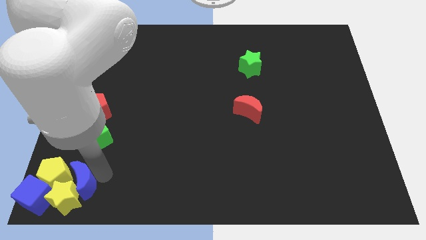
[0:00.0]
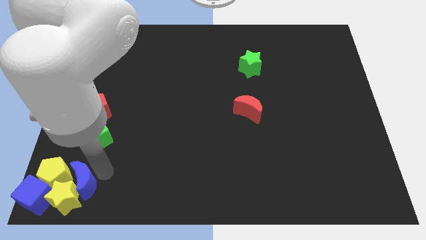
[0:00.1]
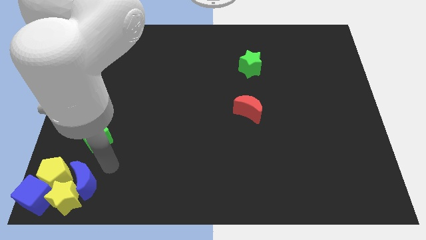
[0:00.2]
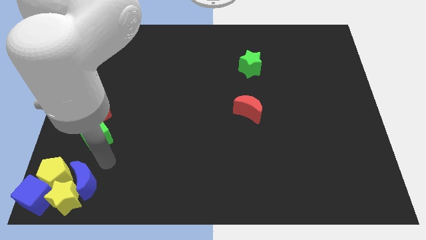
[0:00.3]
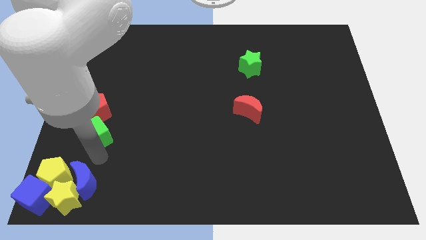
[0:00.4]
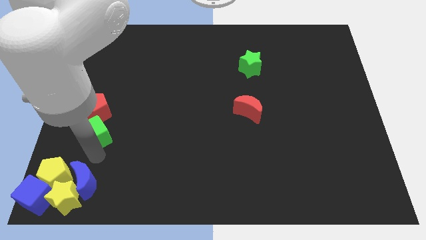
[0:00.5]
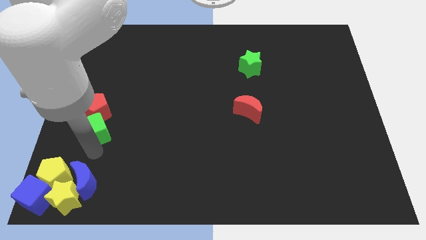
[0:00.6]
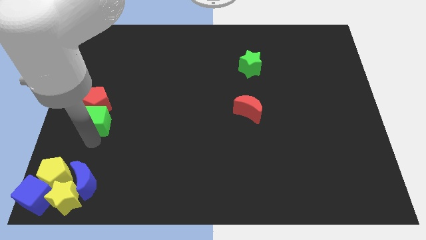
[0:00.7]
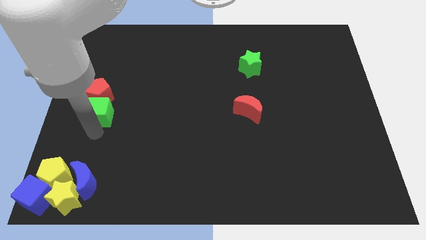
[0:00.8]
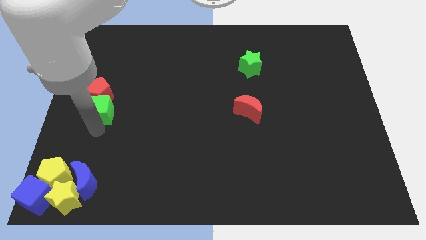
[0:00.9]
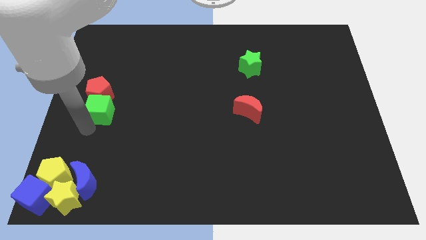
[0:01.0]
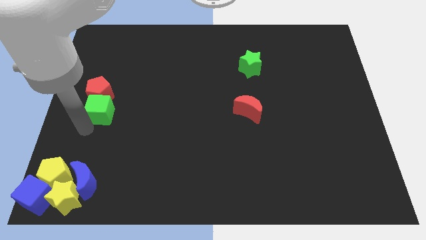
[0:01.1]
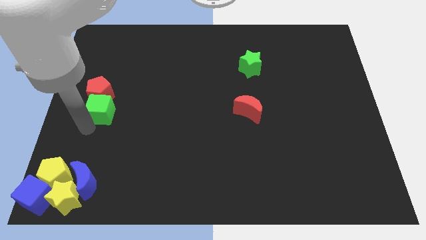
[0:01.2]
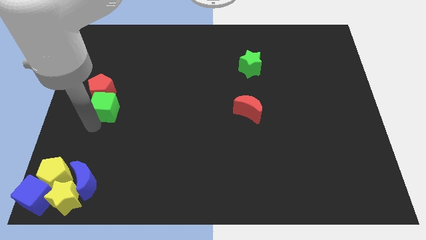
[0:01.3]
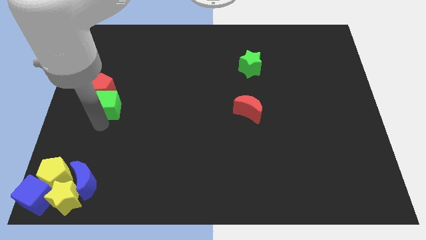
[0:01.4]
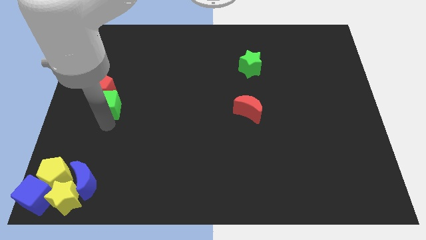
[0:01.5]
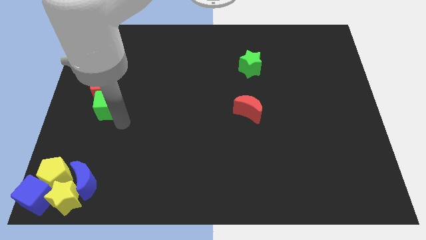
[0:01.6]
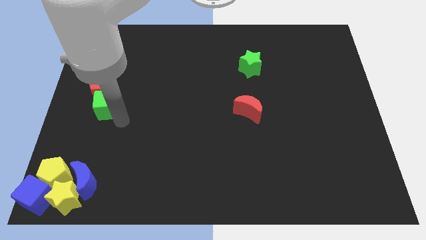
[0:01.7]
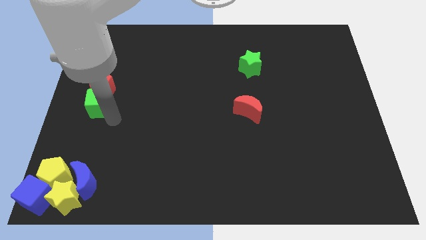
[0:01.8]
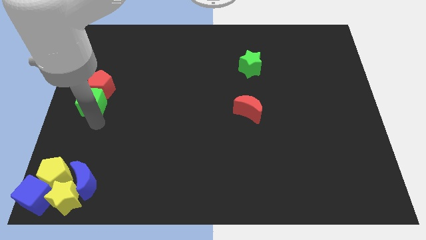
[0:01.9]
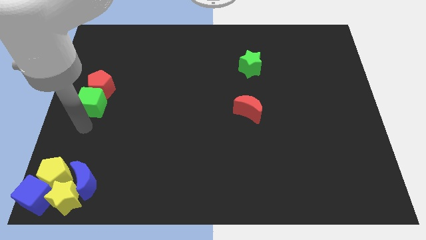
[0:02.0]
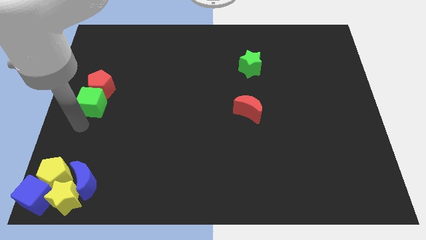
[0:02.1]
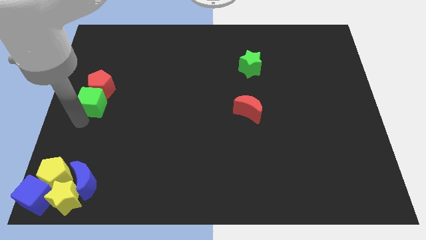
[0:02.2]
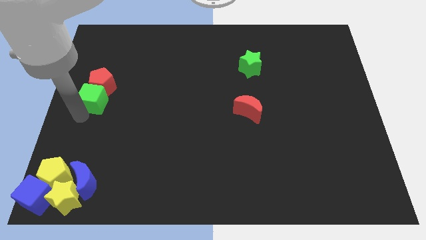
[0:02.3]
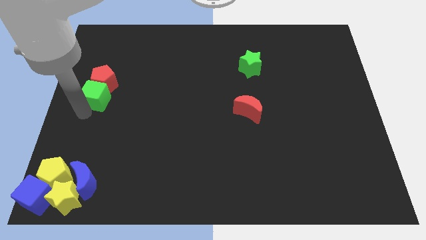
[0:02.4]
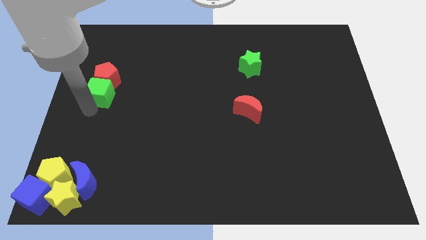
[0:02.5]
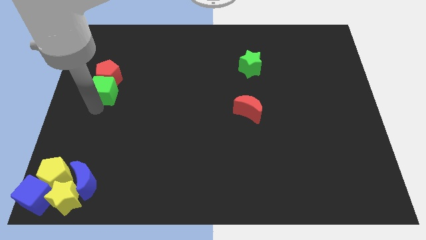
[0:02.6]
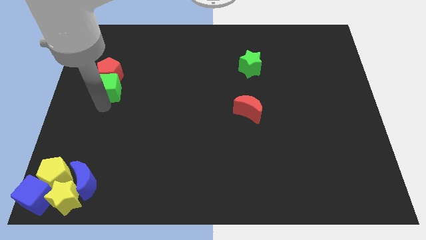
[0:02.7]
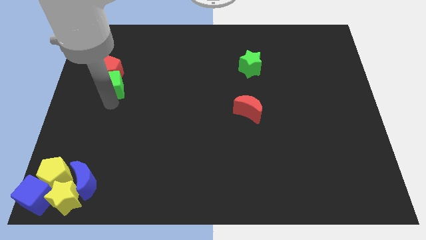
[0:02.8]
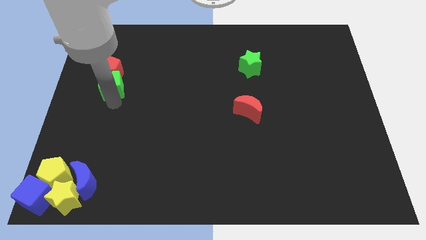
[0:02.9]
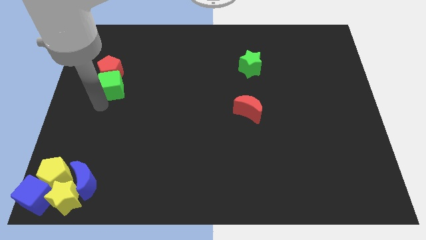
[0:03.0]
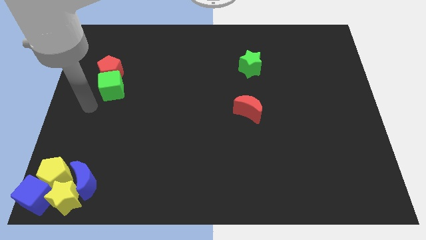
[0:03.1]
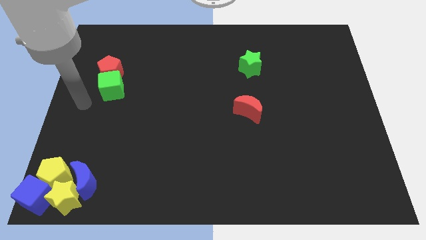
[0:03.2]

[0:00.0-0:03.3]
push the green cube into the red pentagon

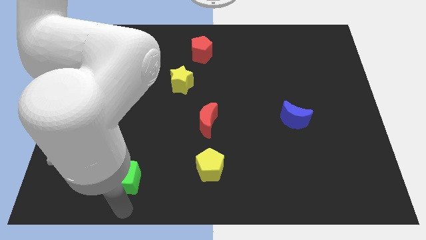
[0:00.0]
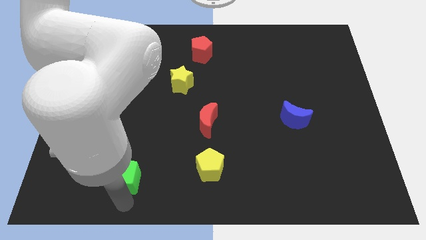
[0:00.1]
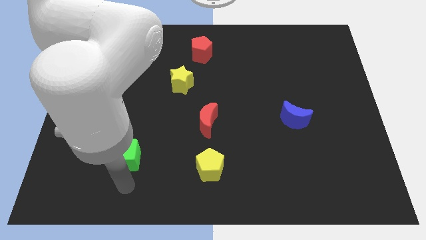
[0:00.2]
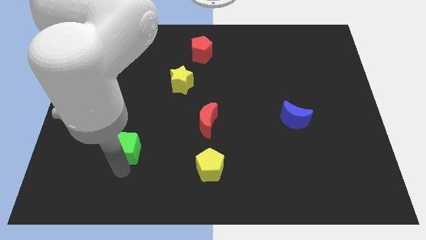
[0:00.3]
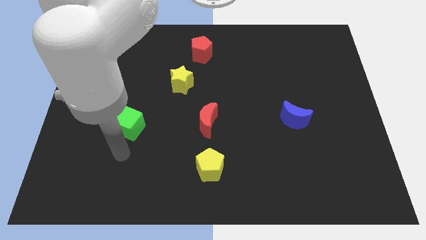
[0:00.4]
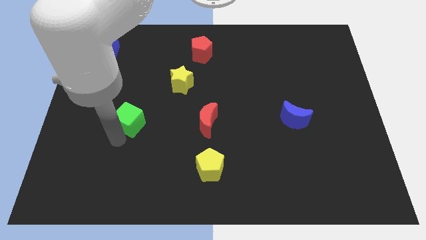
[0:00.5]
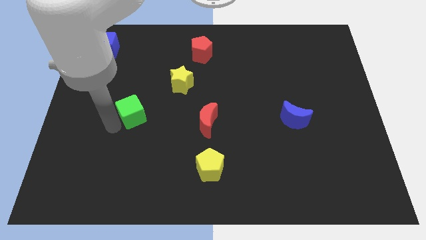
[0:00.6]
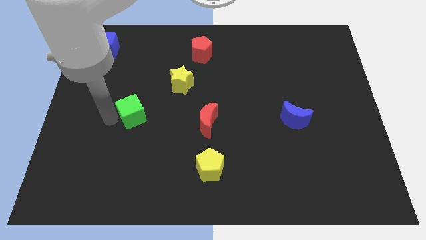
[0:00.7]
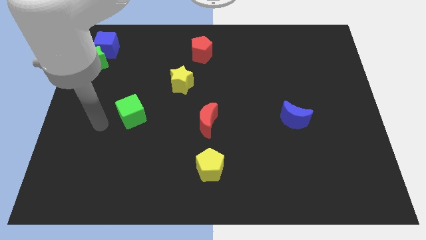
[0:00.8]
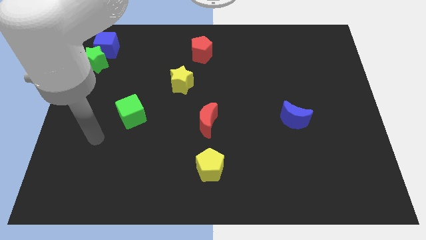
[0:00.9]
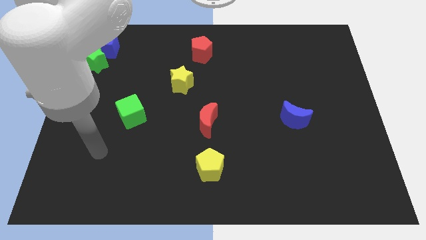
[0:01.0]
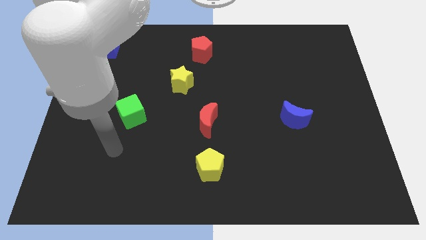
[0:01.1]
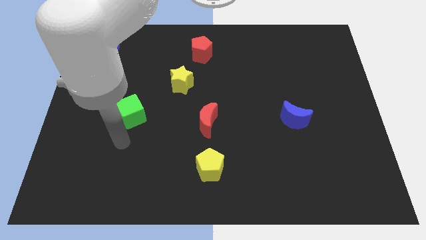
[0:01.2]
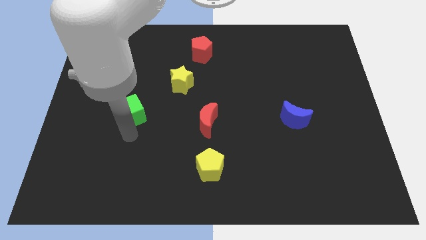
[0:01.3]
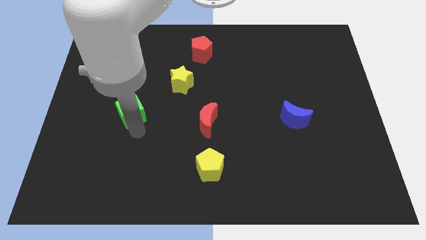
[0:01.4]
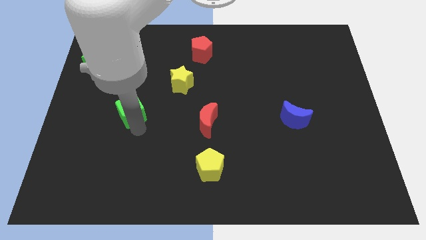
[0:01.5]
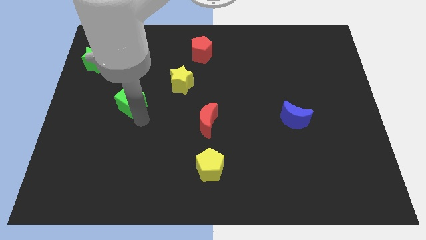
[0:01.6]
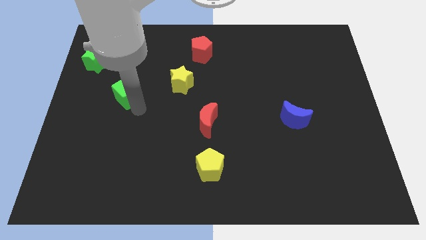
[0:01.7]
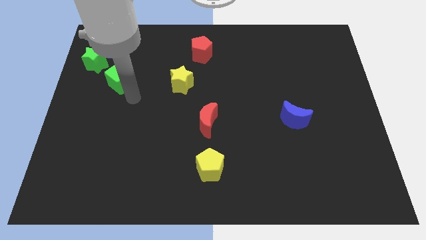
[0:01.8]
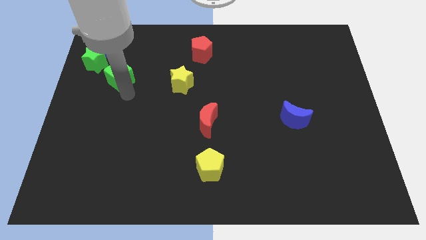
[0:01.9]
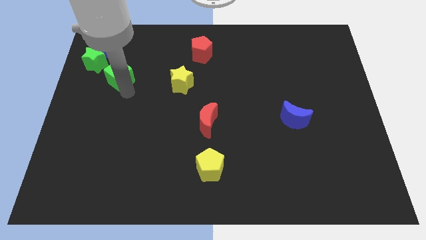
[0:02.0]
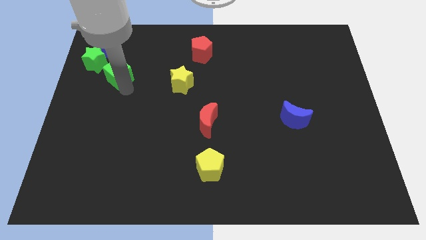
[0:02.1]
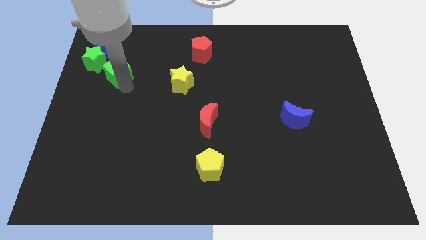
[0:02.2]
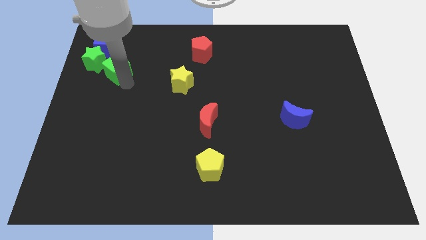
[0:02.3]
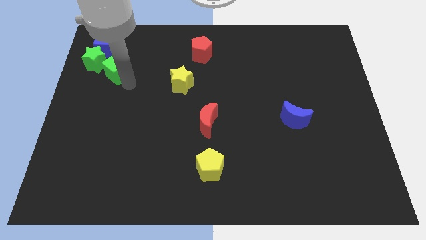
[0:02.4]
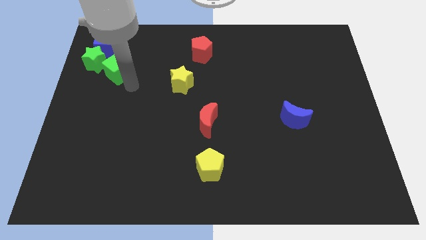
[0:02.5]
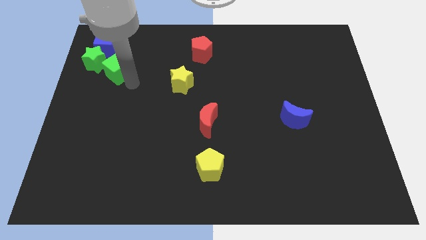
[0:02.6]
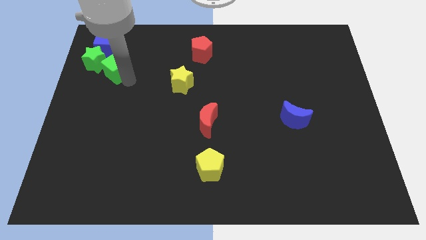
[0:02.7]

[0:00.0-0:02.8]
slide green cube towards green star

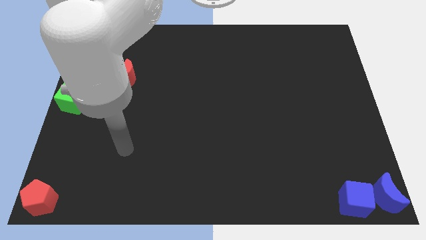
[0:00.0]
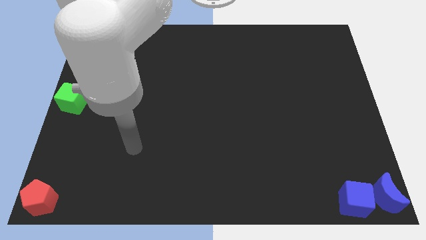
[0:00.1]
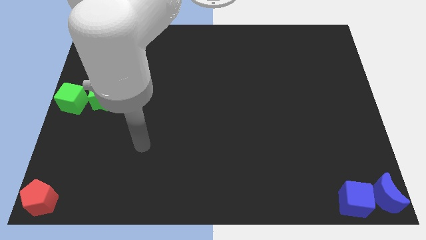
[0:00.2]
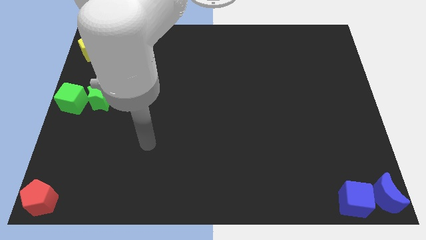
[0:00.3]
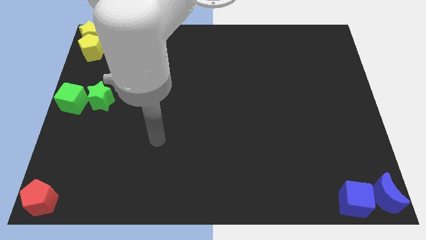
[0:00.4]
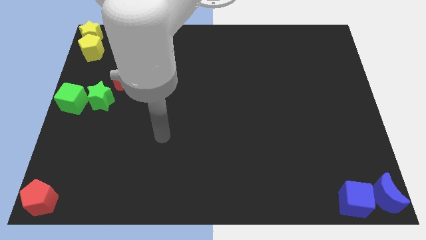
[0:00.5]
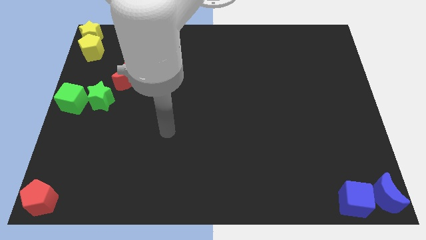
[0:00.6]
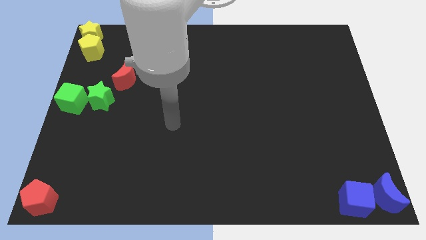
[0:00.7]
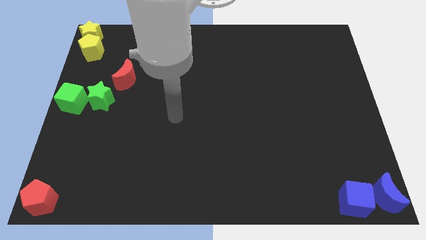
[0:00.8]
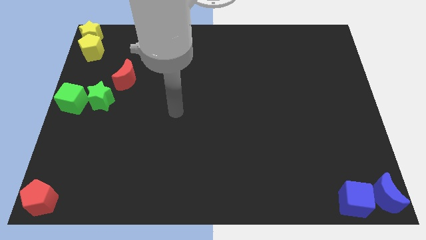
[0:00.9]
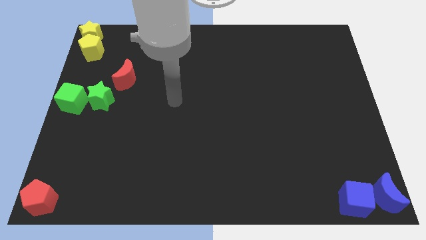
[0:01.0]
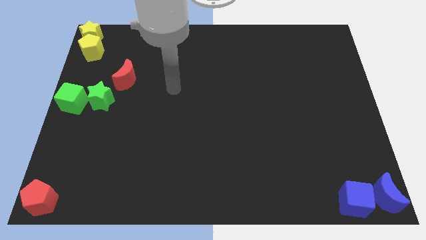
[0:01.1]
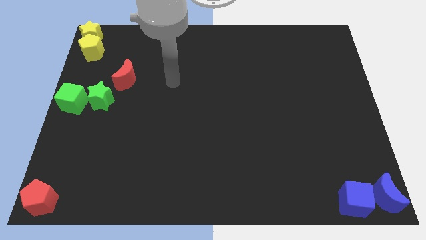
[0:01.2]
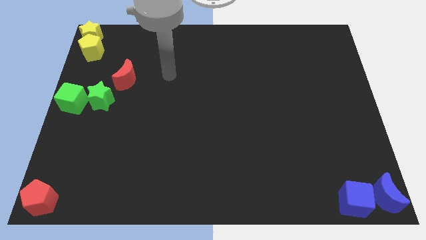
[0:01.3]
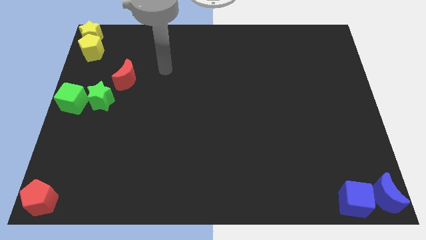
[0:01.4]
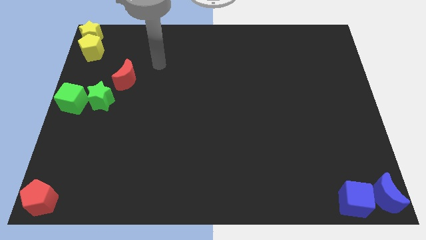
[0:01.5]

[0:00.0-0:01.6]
move the red pentagon to bottom left corner of the board

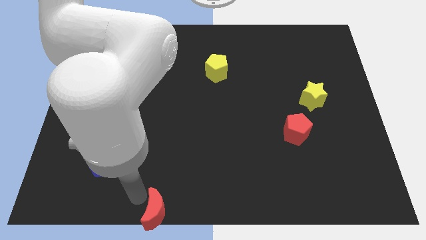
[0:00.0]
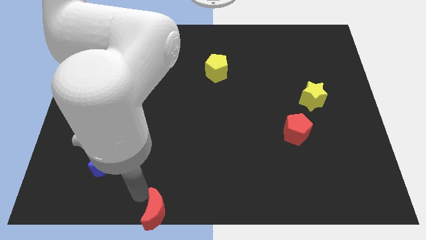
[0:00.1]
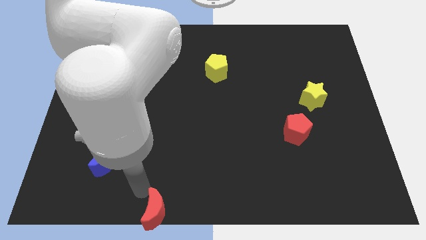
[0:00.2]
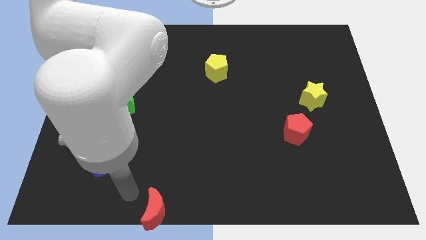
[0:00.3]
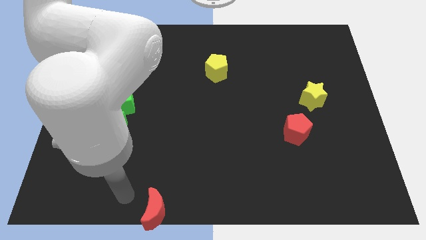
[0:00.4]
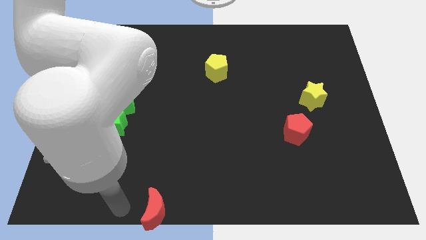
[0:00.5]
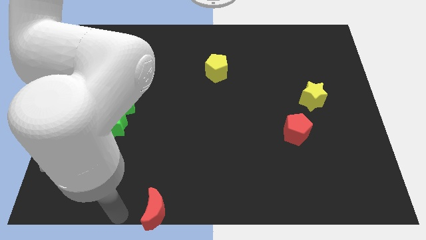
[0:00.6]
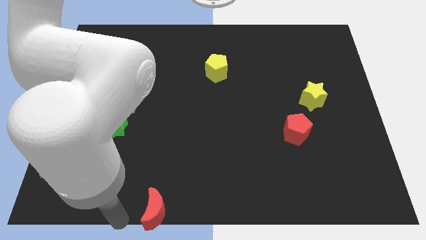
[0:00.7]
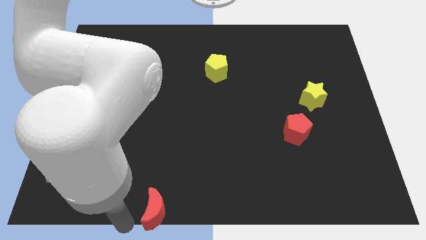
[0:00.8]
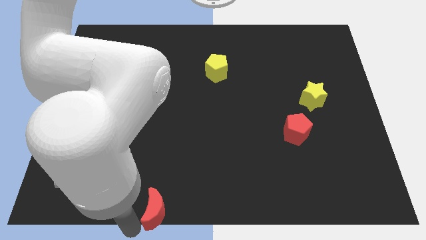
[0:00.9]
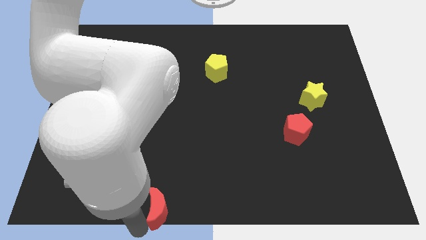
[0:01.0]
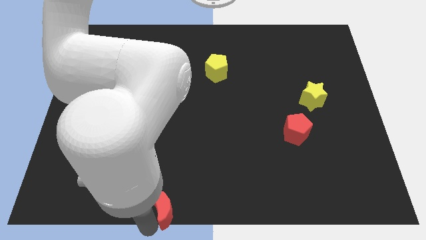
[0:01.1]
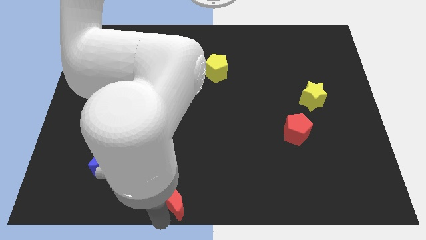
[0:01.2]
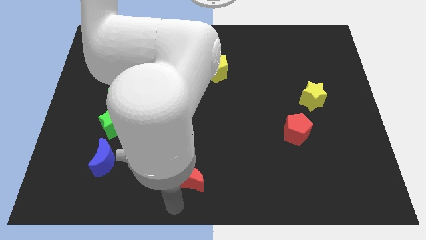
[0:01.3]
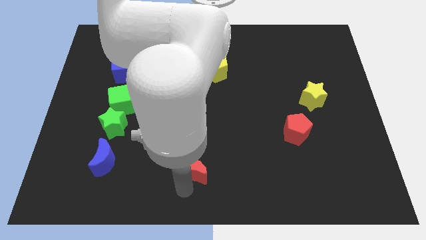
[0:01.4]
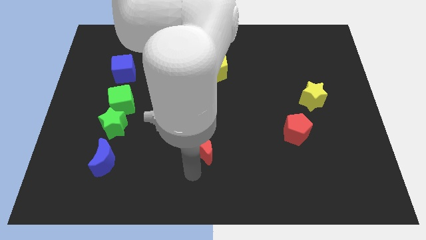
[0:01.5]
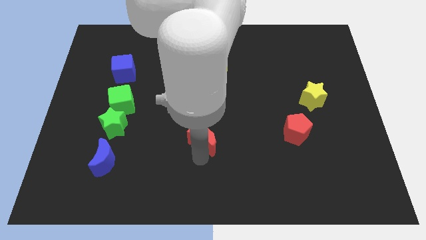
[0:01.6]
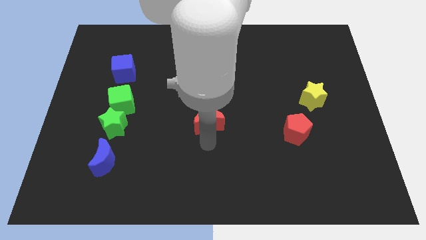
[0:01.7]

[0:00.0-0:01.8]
place the red crescent to the center of the board
